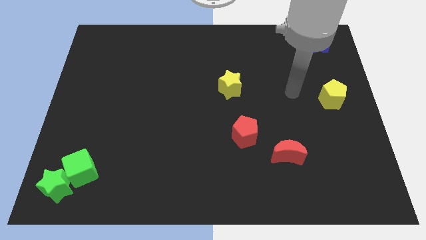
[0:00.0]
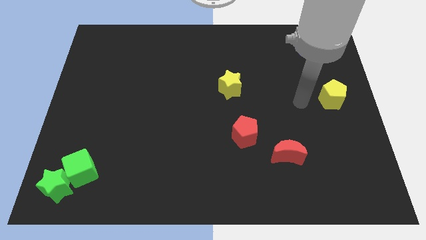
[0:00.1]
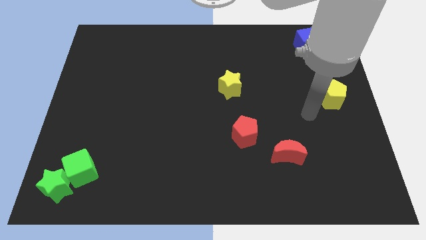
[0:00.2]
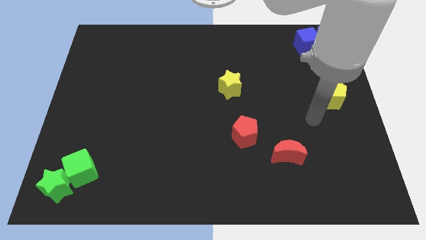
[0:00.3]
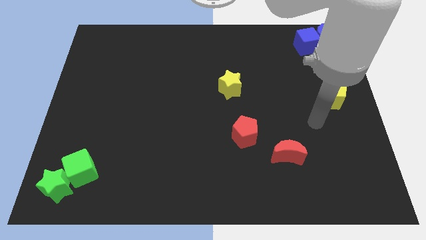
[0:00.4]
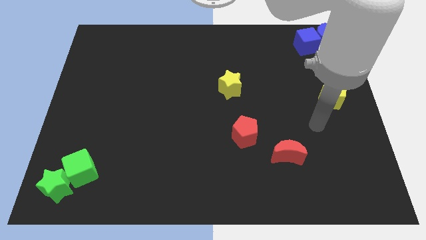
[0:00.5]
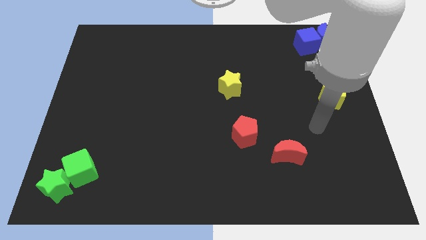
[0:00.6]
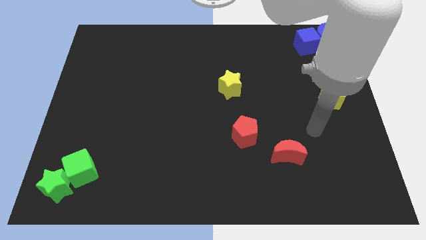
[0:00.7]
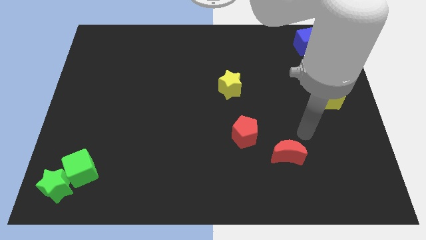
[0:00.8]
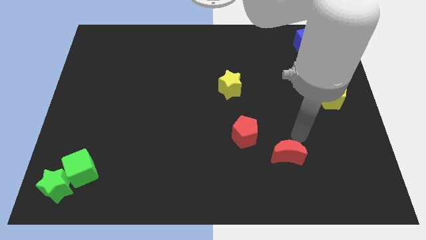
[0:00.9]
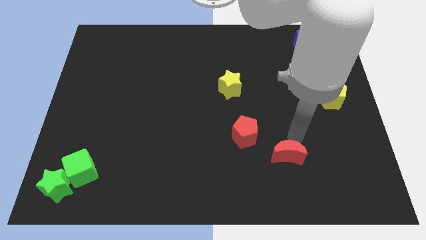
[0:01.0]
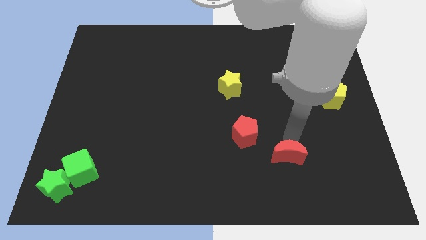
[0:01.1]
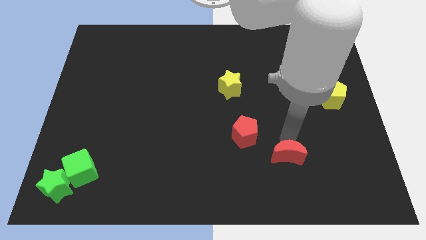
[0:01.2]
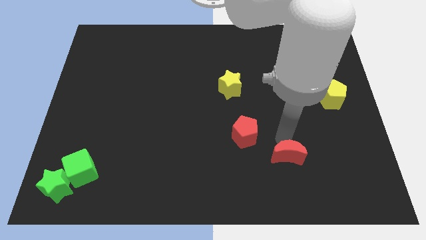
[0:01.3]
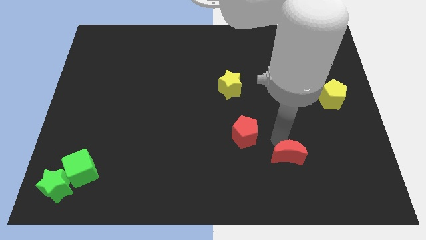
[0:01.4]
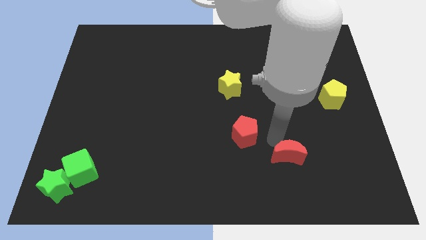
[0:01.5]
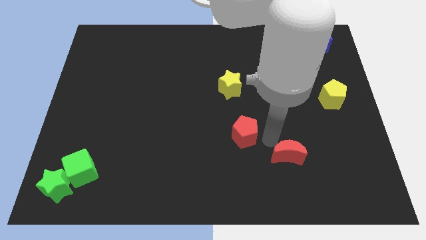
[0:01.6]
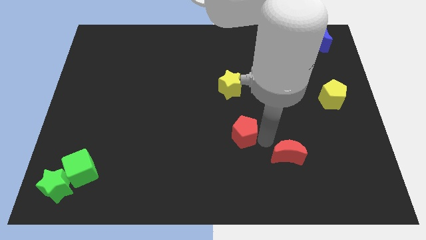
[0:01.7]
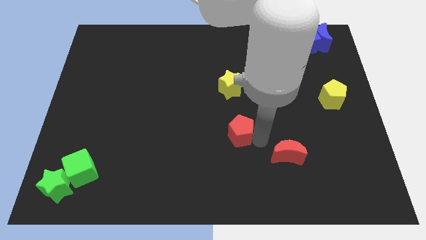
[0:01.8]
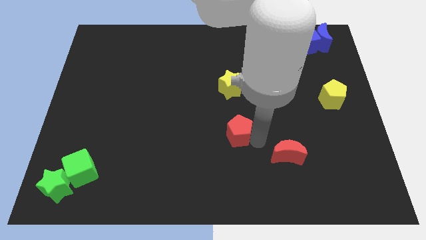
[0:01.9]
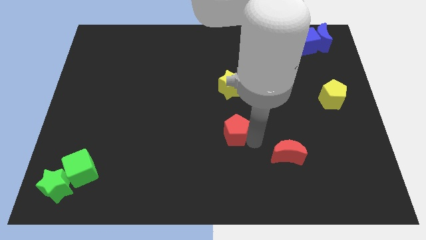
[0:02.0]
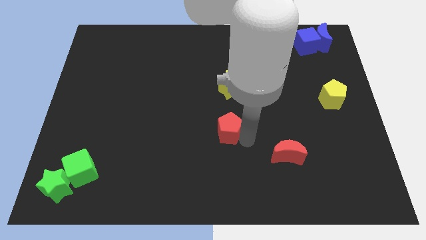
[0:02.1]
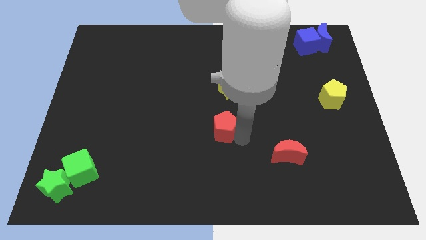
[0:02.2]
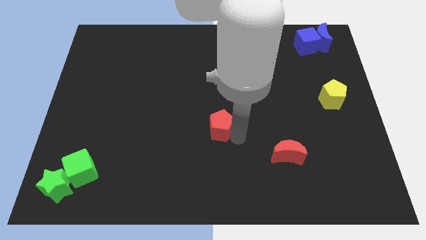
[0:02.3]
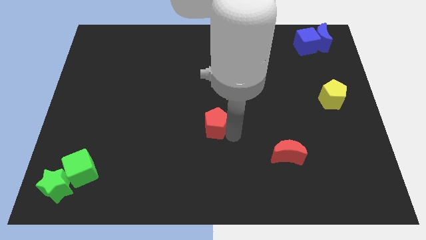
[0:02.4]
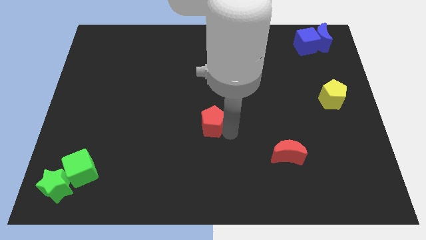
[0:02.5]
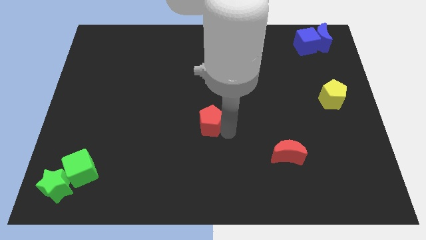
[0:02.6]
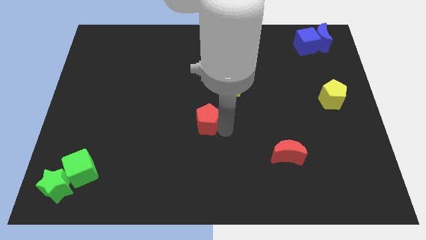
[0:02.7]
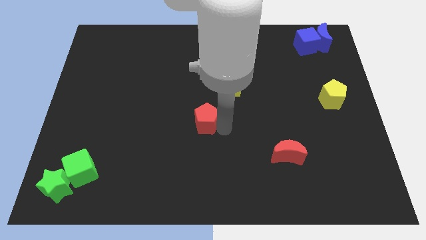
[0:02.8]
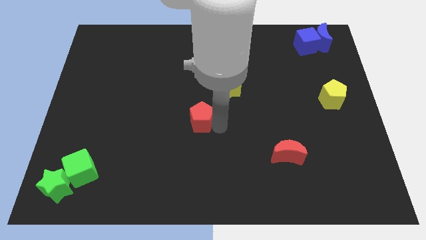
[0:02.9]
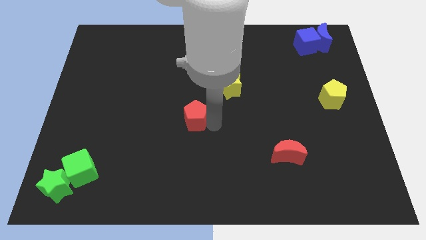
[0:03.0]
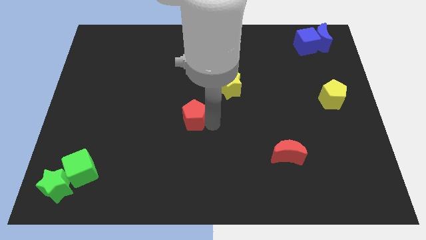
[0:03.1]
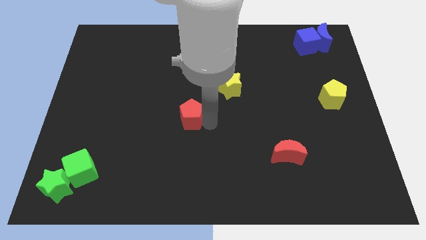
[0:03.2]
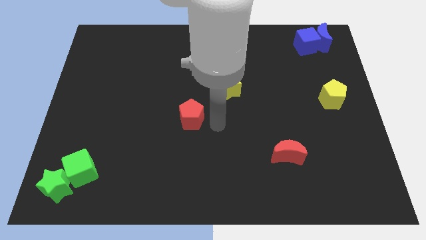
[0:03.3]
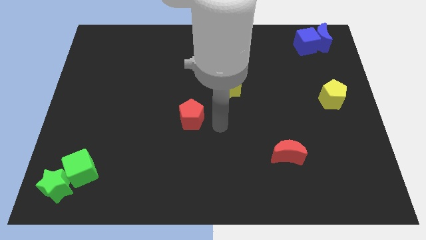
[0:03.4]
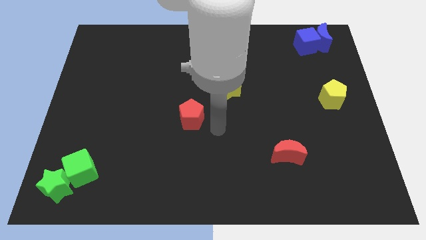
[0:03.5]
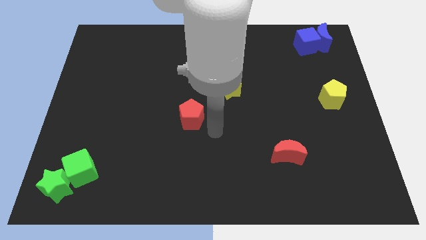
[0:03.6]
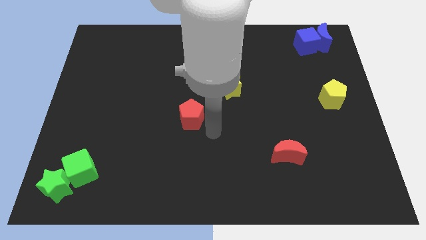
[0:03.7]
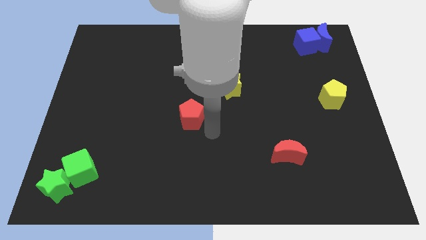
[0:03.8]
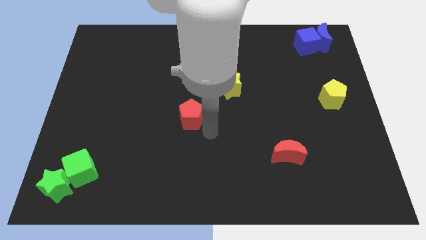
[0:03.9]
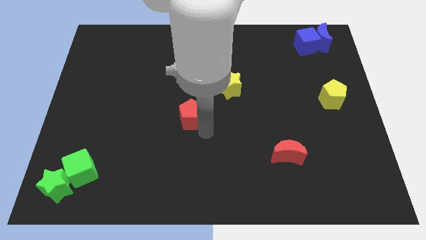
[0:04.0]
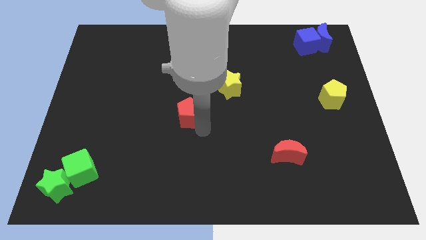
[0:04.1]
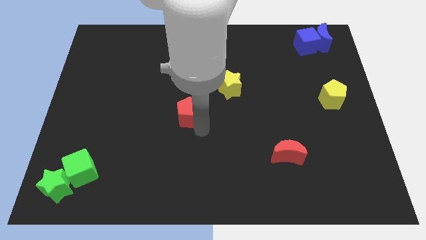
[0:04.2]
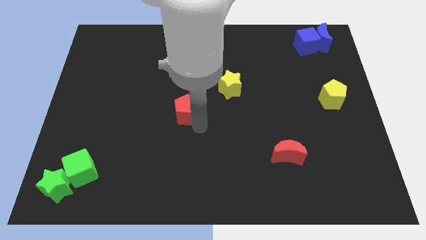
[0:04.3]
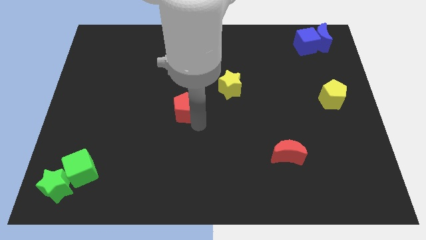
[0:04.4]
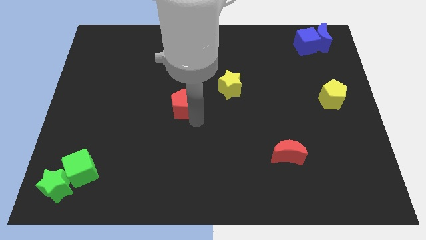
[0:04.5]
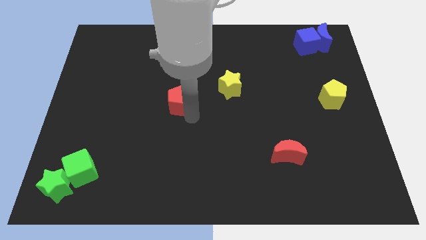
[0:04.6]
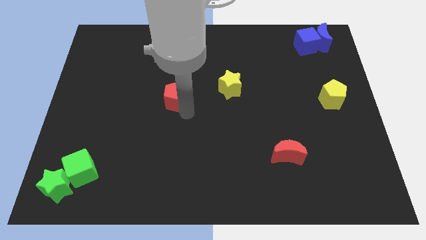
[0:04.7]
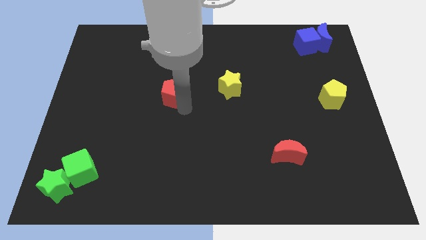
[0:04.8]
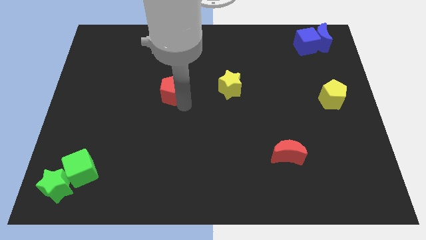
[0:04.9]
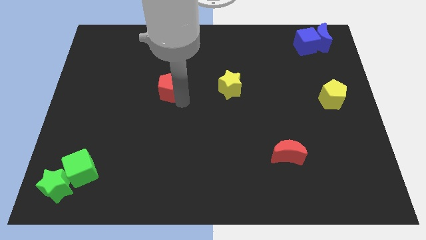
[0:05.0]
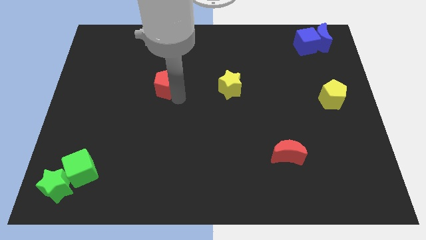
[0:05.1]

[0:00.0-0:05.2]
place the red pentagon to the left of the yellow star

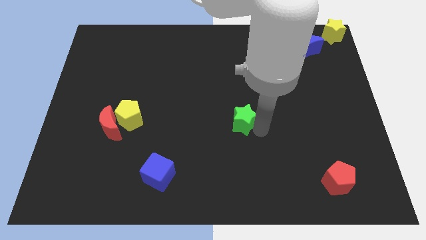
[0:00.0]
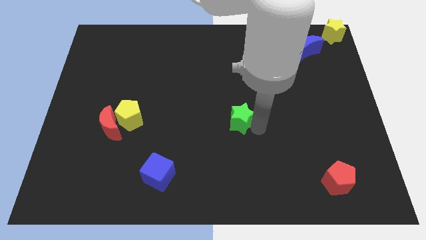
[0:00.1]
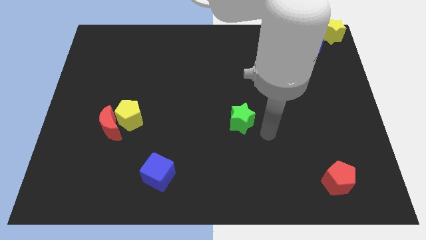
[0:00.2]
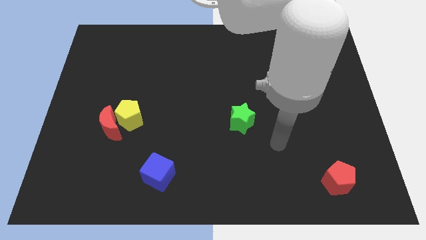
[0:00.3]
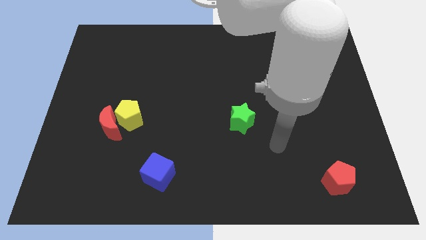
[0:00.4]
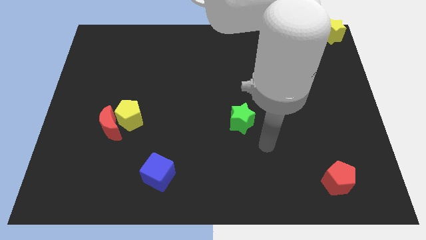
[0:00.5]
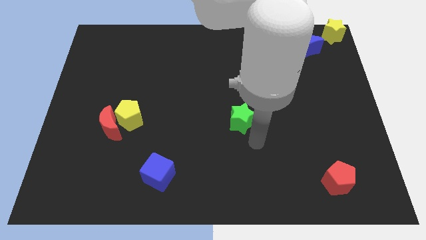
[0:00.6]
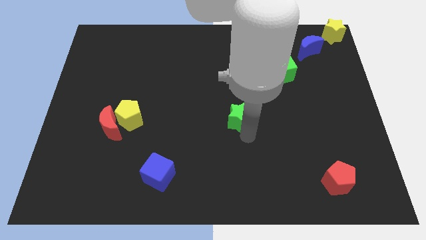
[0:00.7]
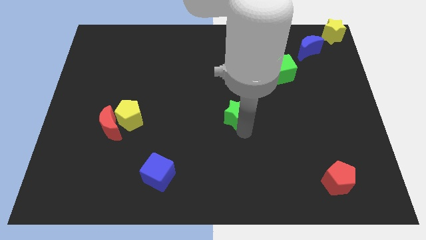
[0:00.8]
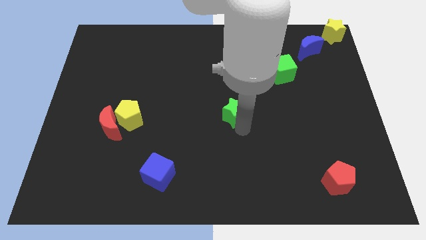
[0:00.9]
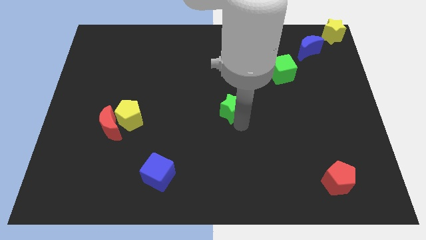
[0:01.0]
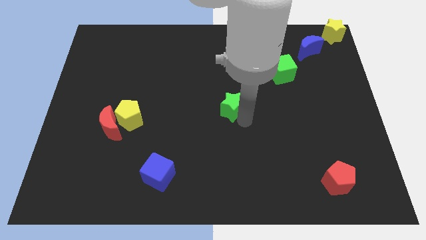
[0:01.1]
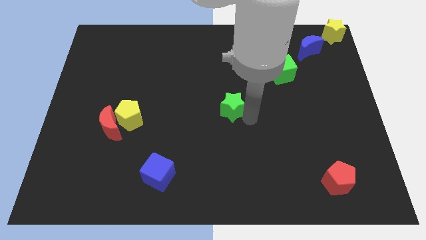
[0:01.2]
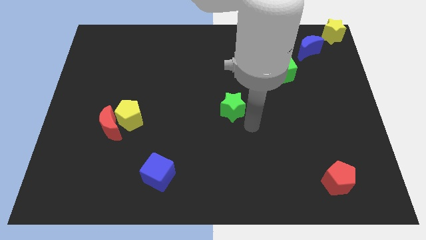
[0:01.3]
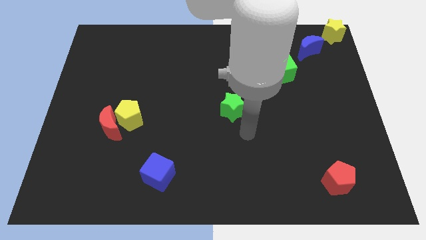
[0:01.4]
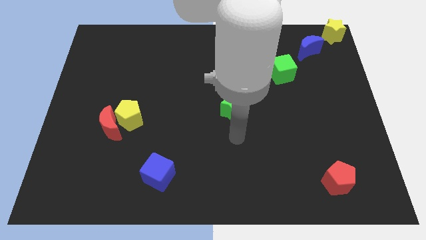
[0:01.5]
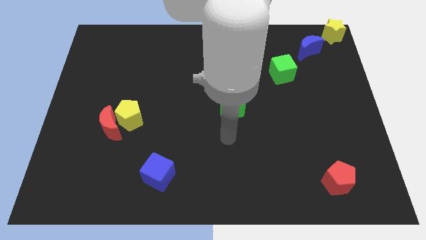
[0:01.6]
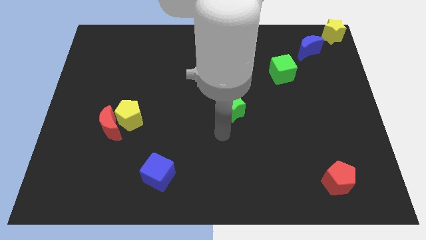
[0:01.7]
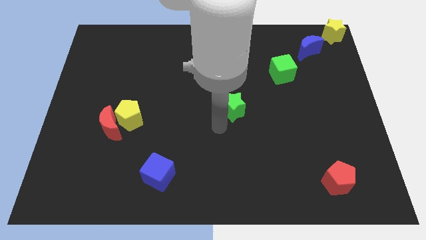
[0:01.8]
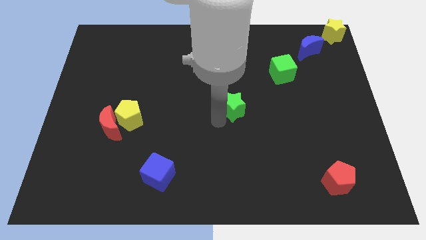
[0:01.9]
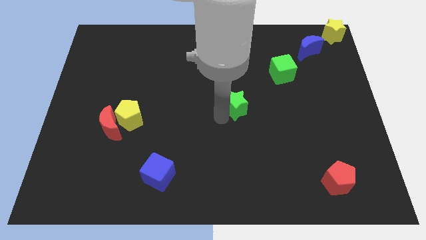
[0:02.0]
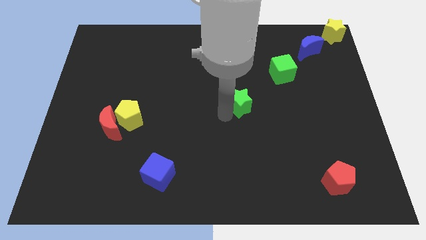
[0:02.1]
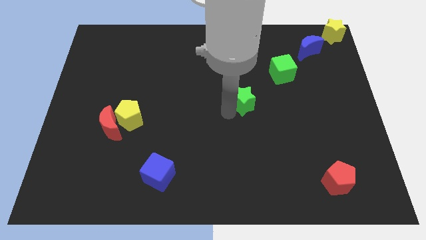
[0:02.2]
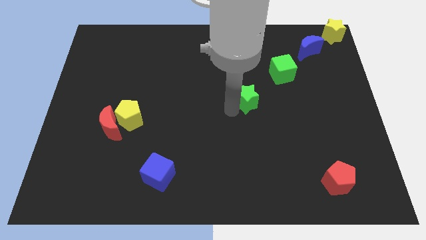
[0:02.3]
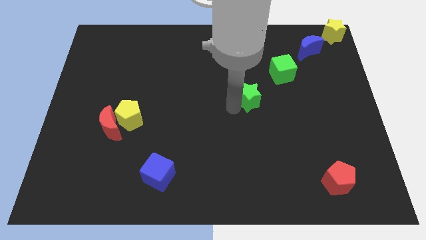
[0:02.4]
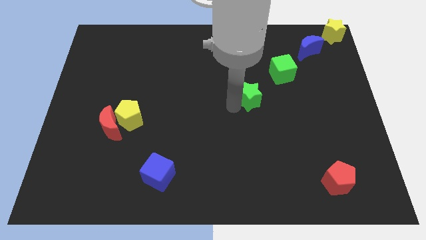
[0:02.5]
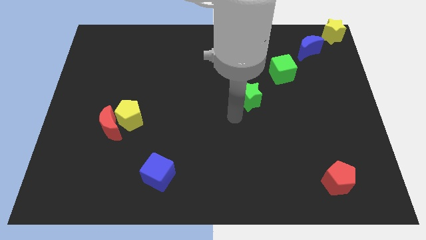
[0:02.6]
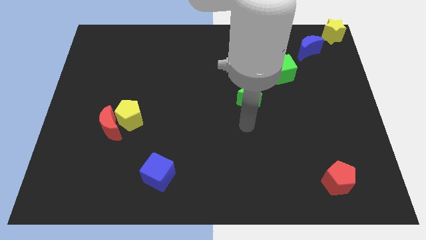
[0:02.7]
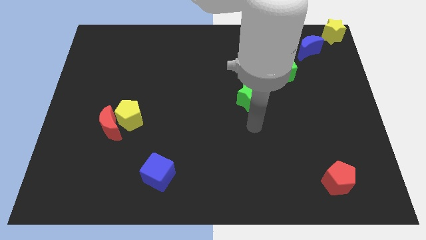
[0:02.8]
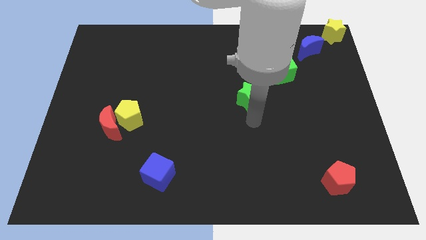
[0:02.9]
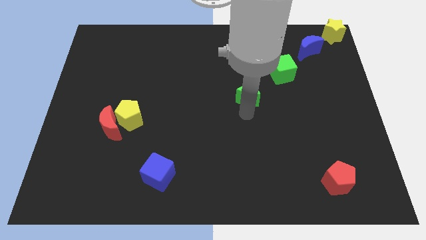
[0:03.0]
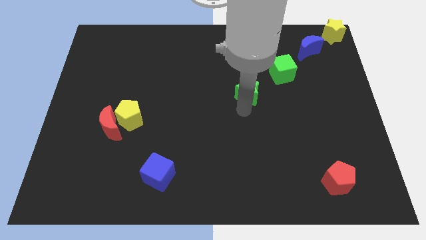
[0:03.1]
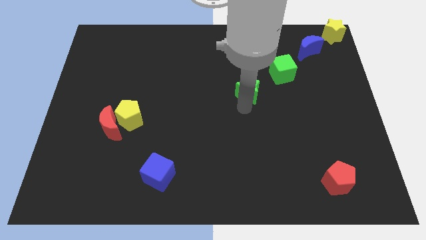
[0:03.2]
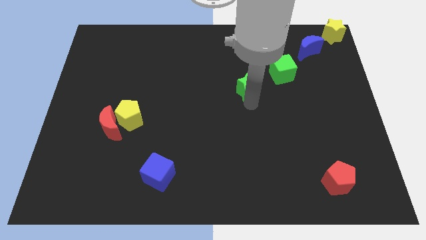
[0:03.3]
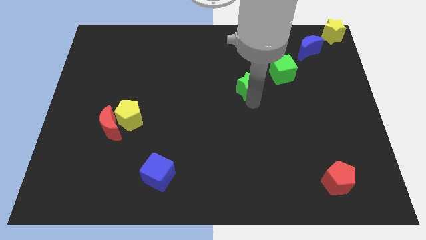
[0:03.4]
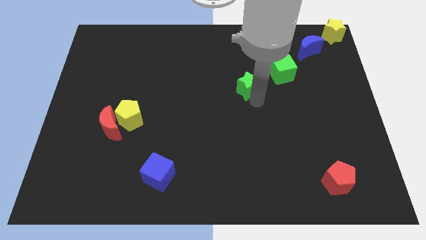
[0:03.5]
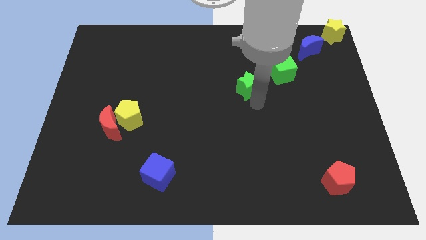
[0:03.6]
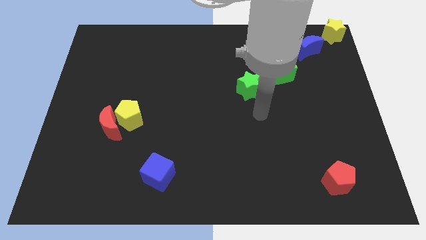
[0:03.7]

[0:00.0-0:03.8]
place green star diagonally towards green cube
